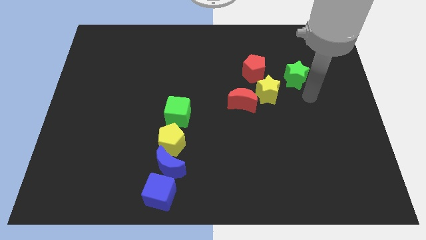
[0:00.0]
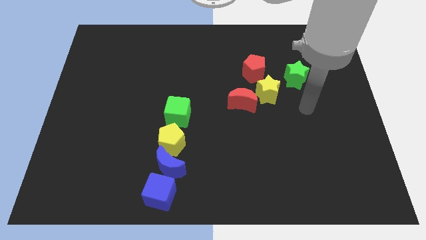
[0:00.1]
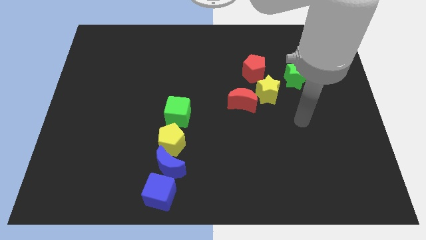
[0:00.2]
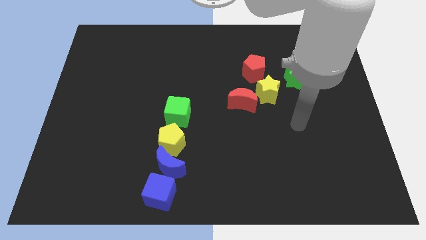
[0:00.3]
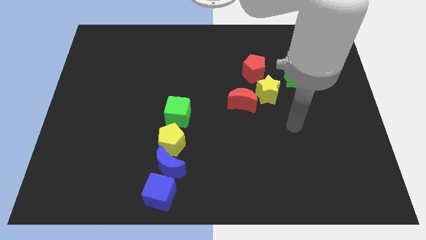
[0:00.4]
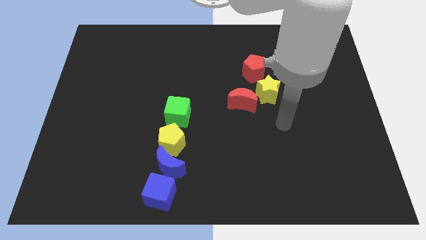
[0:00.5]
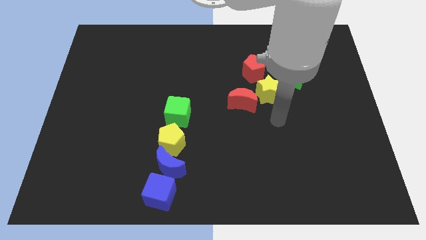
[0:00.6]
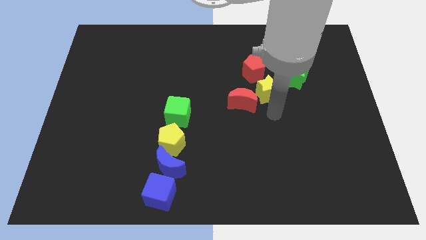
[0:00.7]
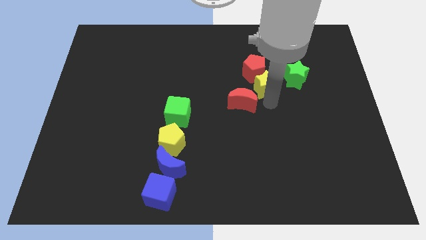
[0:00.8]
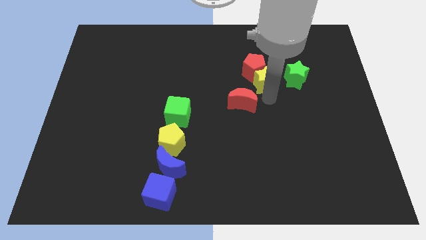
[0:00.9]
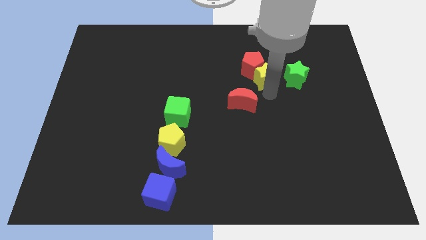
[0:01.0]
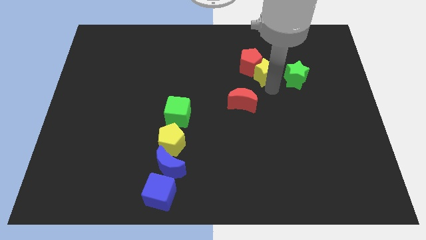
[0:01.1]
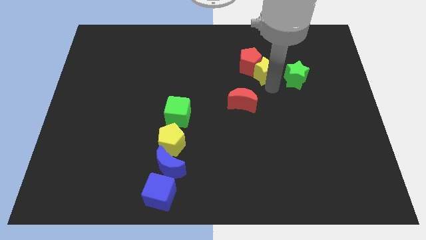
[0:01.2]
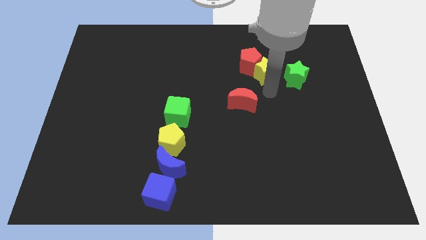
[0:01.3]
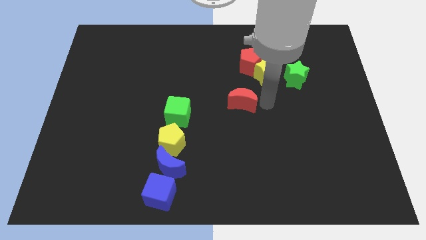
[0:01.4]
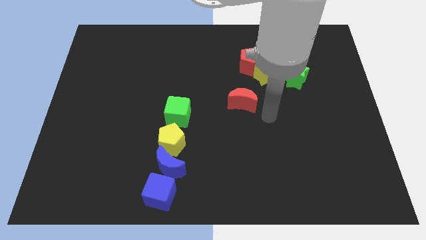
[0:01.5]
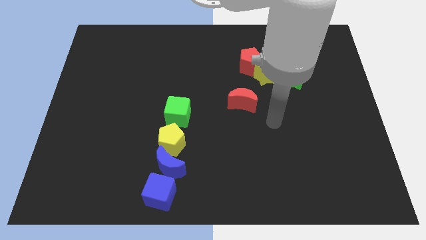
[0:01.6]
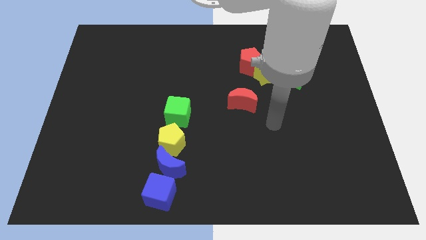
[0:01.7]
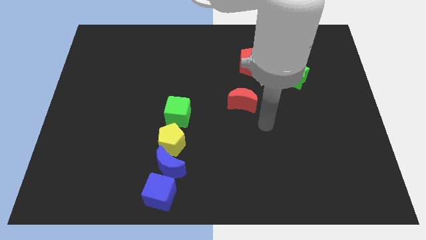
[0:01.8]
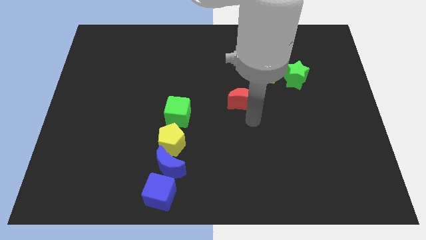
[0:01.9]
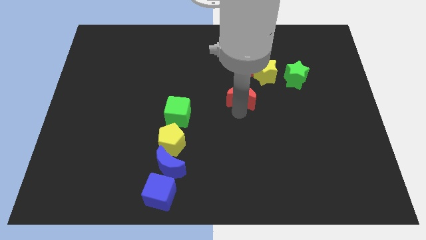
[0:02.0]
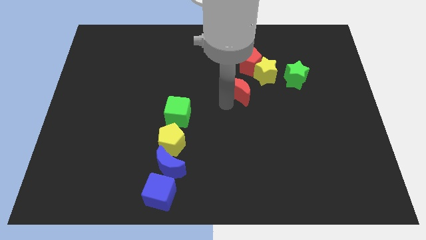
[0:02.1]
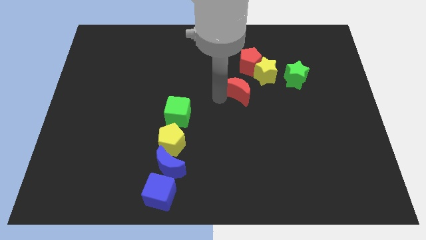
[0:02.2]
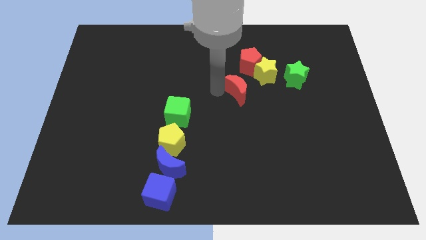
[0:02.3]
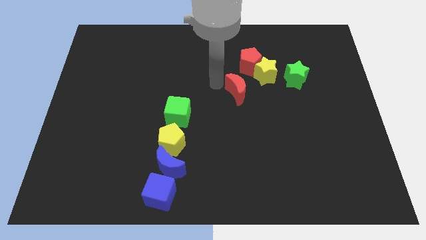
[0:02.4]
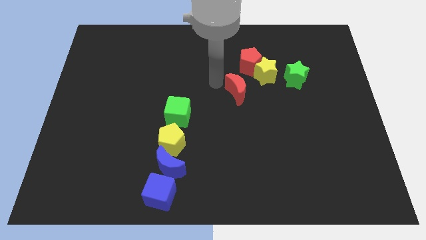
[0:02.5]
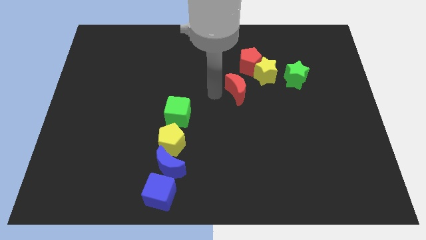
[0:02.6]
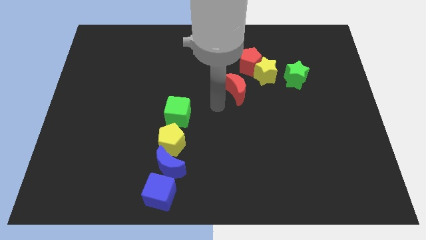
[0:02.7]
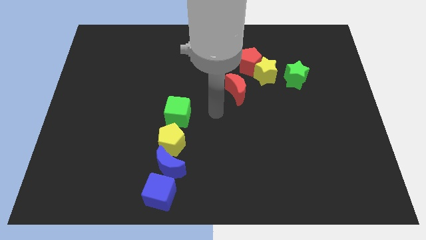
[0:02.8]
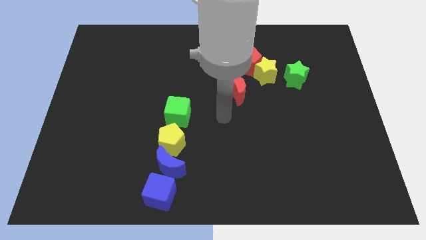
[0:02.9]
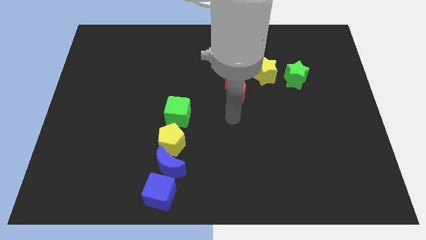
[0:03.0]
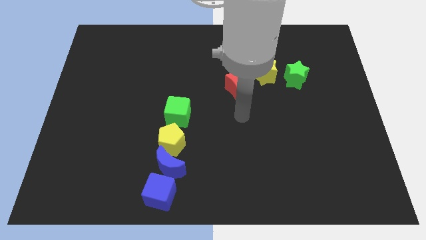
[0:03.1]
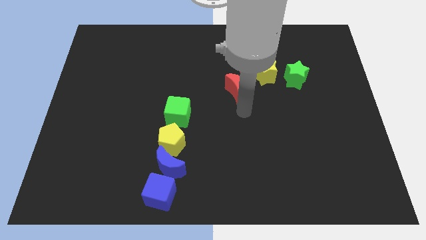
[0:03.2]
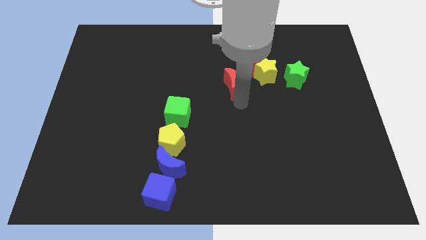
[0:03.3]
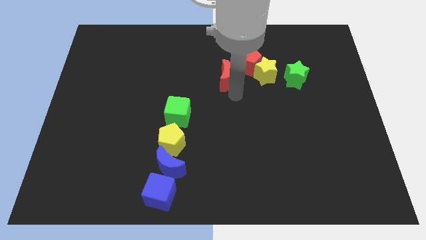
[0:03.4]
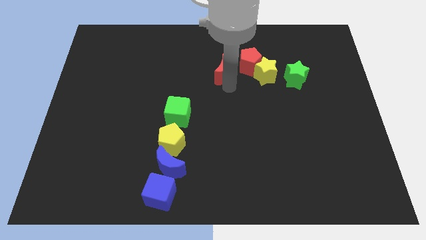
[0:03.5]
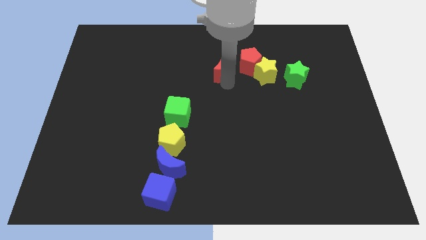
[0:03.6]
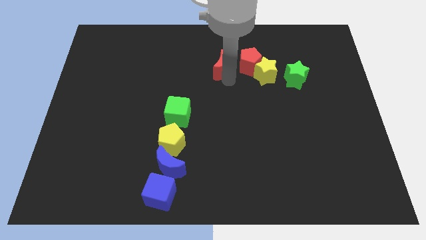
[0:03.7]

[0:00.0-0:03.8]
push the red blocks and yellow star towards the top side of the board

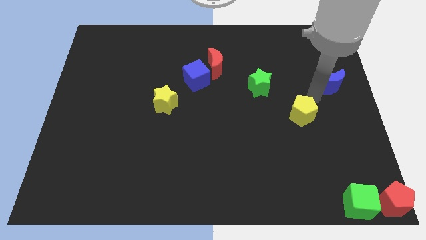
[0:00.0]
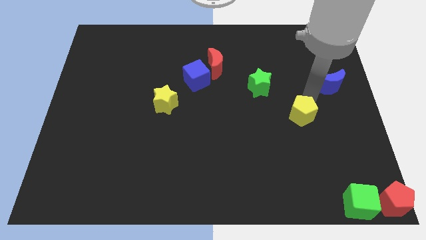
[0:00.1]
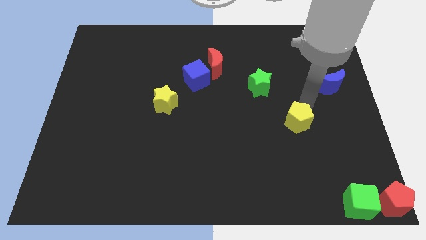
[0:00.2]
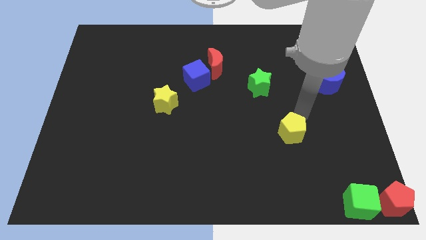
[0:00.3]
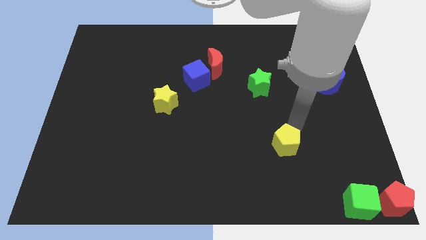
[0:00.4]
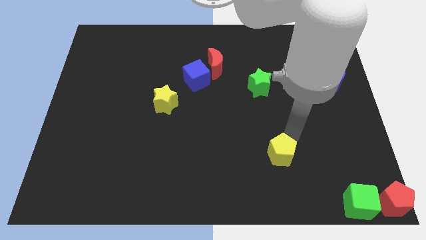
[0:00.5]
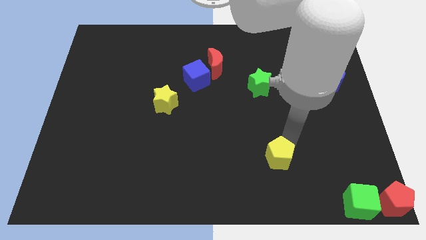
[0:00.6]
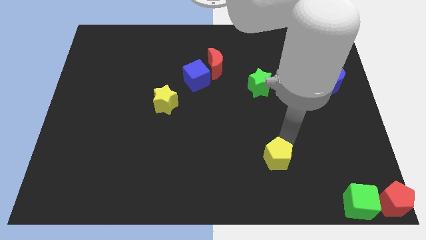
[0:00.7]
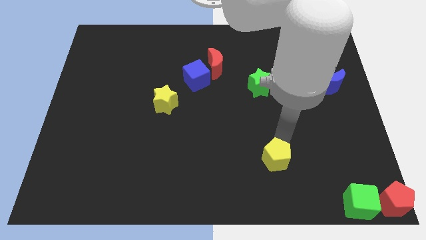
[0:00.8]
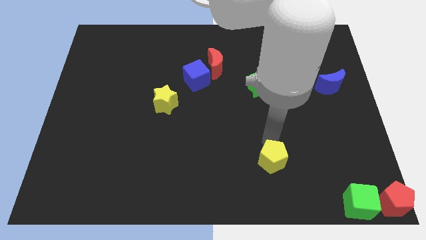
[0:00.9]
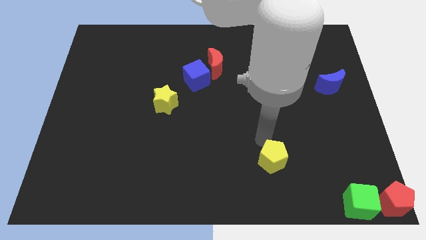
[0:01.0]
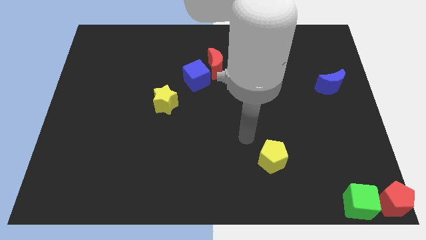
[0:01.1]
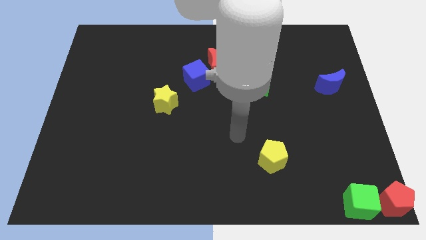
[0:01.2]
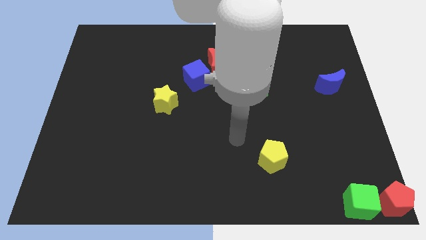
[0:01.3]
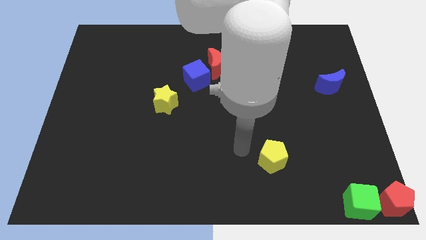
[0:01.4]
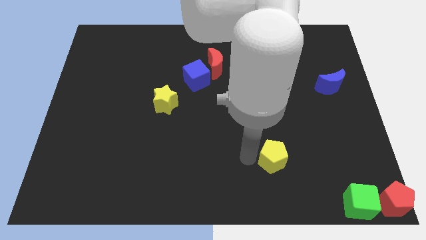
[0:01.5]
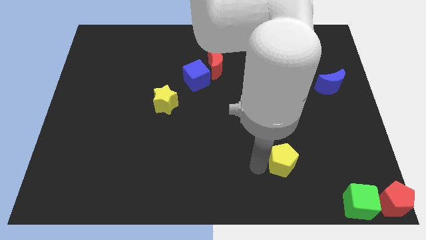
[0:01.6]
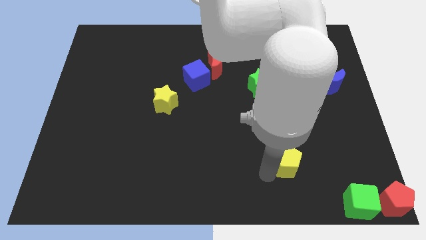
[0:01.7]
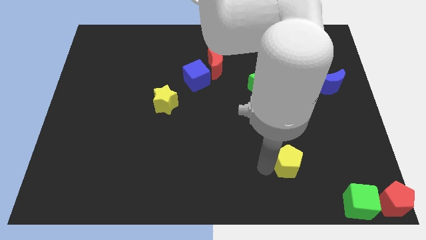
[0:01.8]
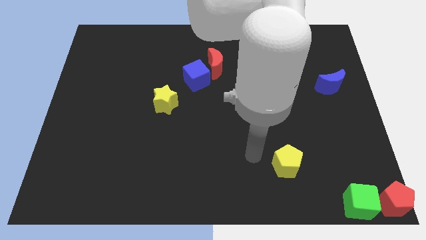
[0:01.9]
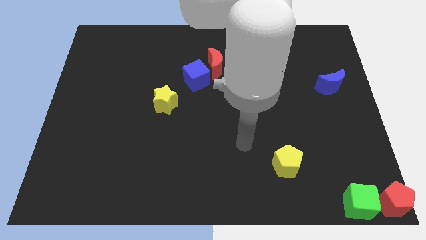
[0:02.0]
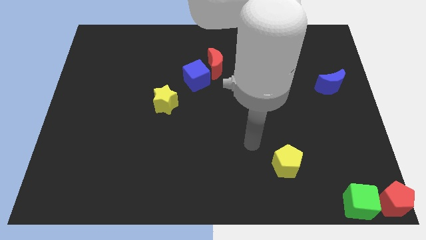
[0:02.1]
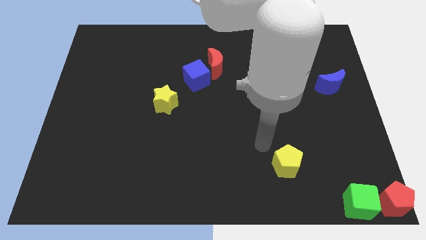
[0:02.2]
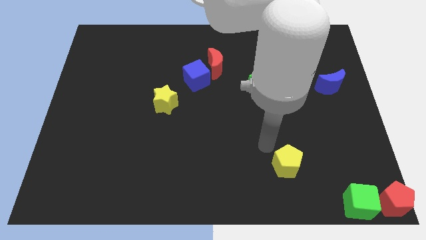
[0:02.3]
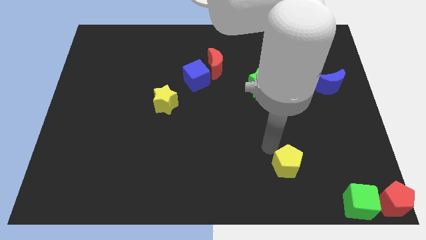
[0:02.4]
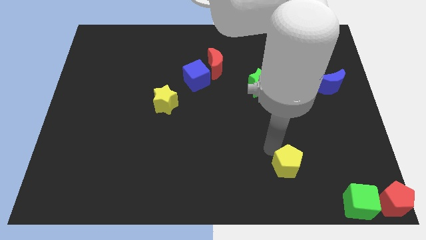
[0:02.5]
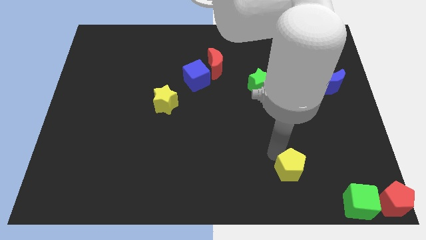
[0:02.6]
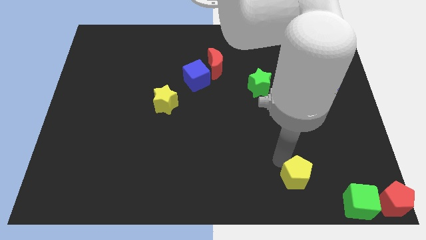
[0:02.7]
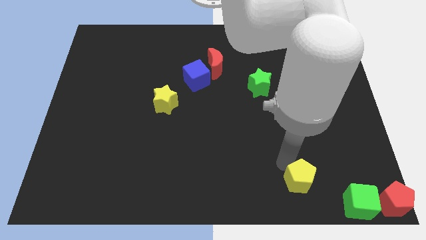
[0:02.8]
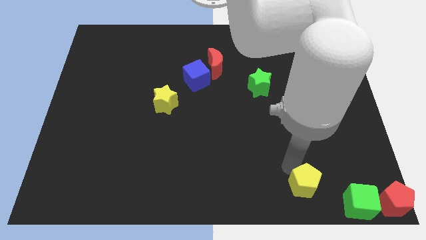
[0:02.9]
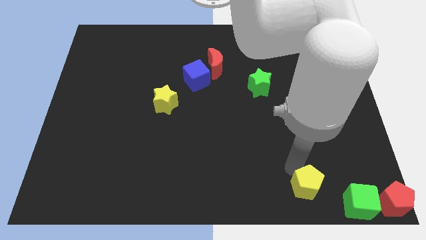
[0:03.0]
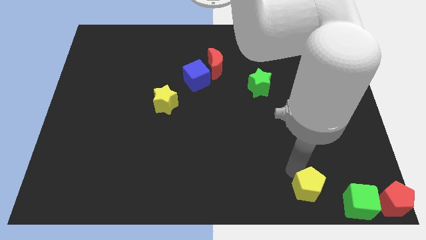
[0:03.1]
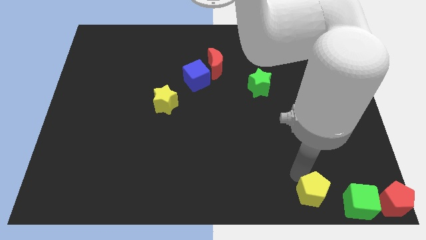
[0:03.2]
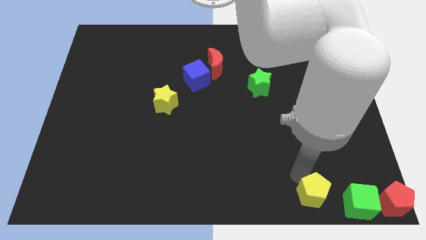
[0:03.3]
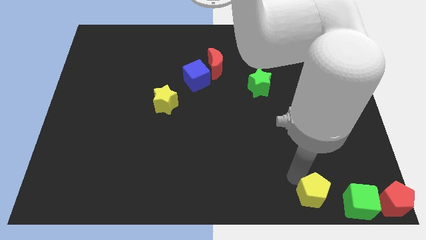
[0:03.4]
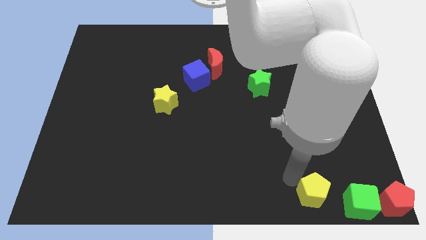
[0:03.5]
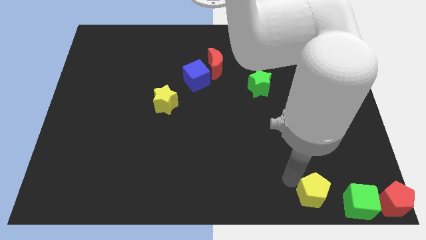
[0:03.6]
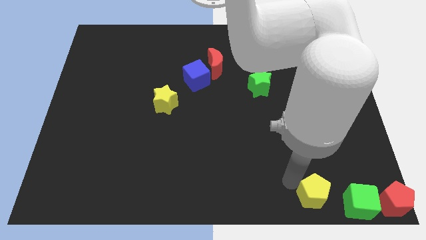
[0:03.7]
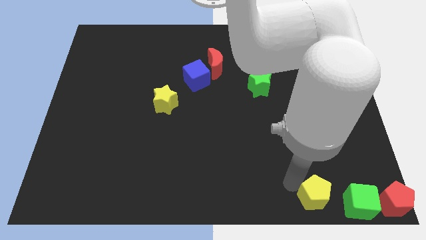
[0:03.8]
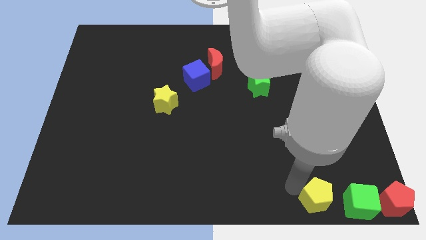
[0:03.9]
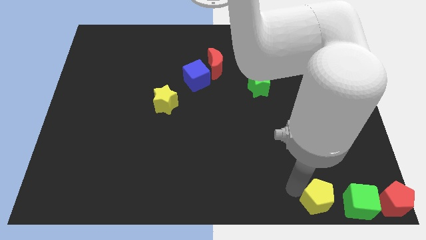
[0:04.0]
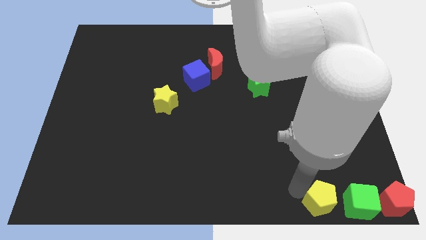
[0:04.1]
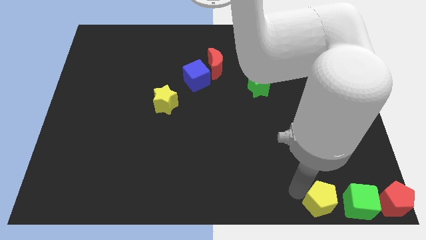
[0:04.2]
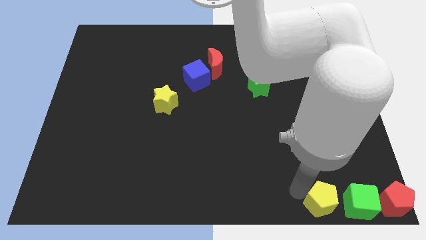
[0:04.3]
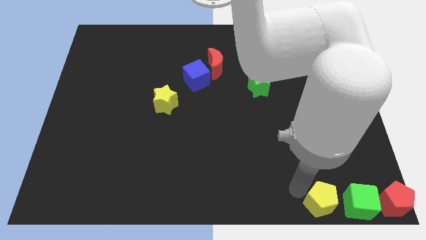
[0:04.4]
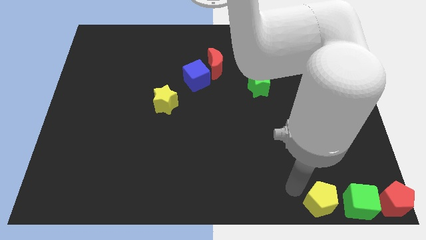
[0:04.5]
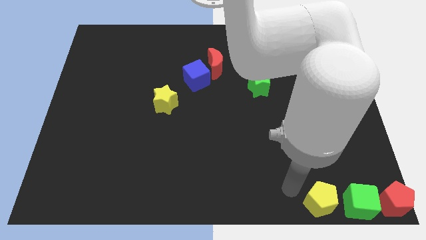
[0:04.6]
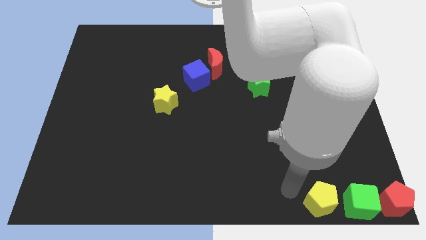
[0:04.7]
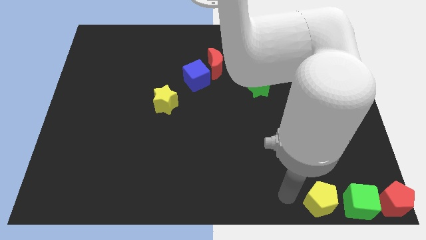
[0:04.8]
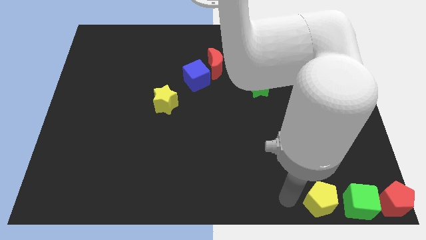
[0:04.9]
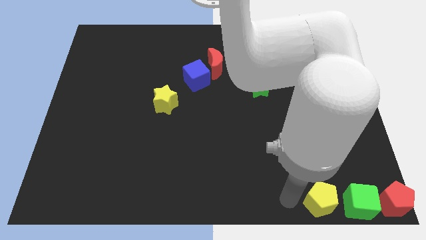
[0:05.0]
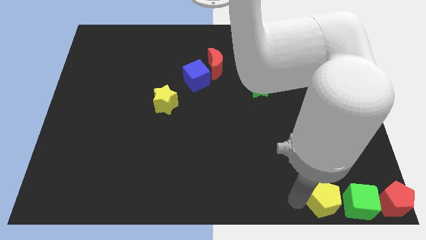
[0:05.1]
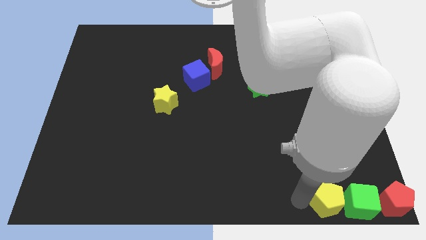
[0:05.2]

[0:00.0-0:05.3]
place the yellow pentagon left to the green cube
